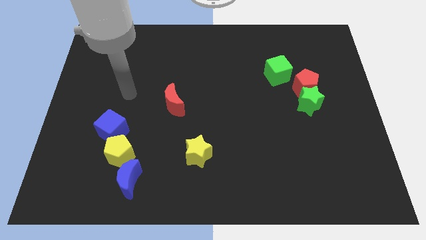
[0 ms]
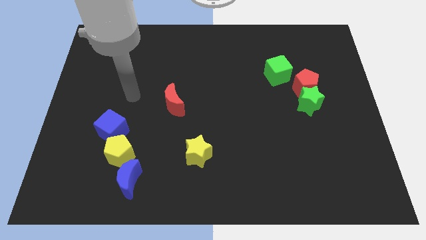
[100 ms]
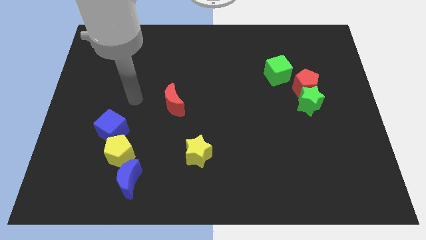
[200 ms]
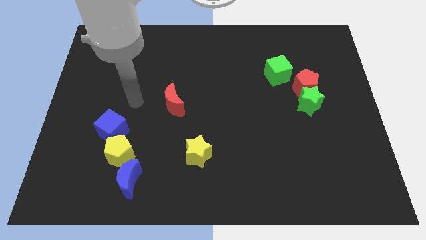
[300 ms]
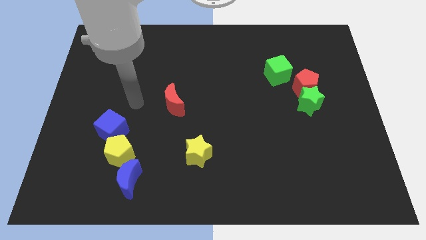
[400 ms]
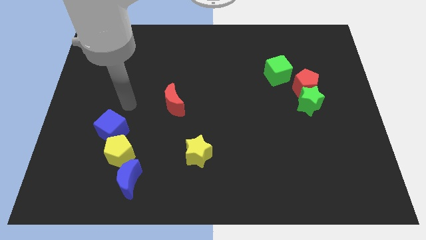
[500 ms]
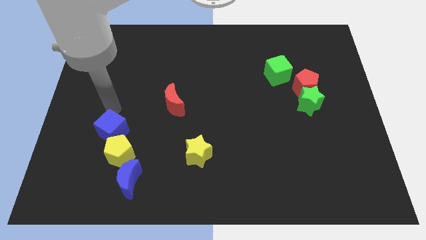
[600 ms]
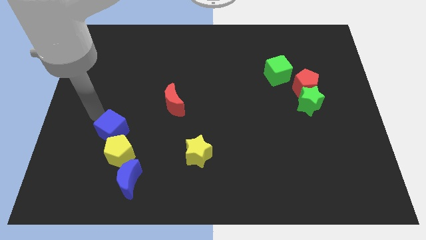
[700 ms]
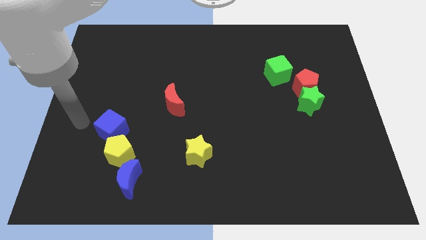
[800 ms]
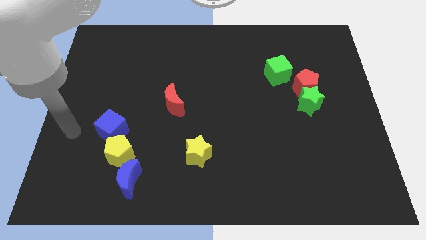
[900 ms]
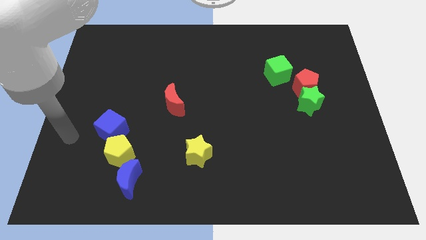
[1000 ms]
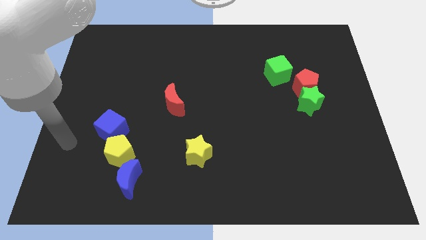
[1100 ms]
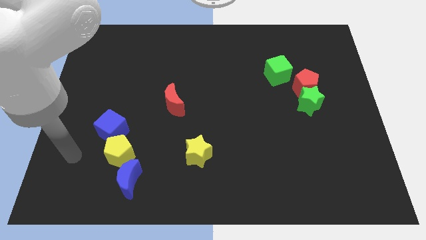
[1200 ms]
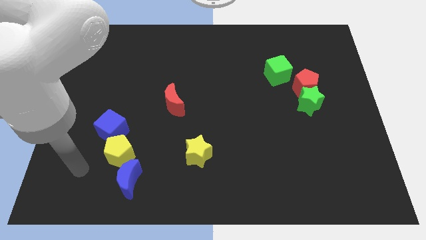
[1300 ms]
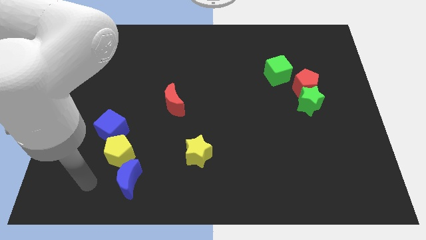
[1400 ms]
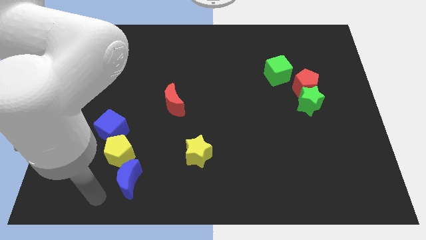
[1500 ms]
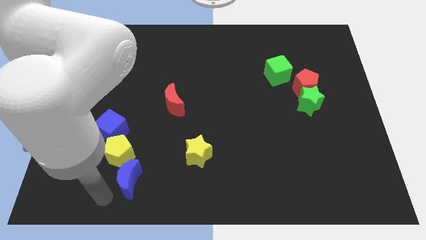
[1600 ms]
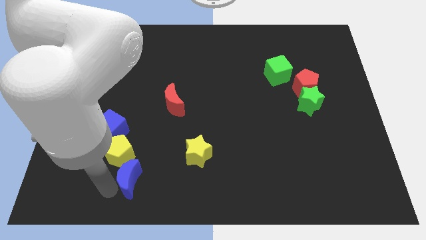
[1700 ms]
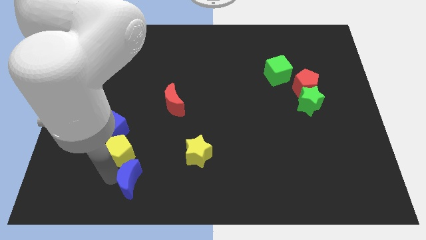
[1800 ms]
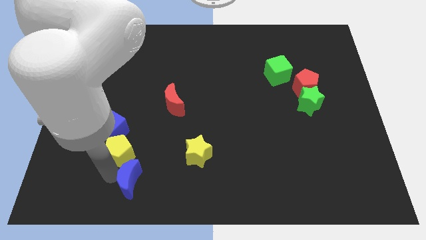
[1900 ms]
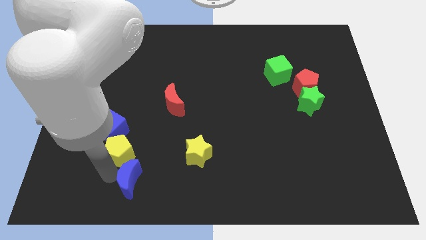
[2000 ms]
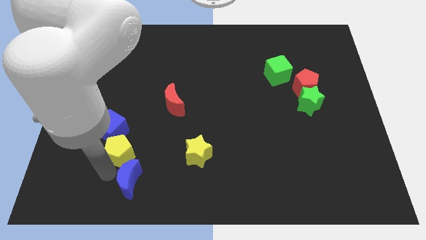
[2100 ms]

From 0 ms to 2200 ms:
move arm near yellow pentagon

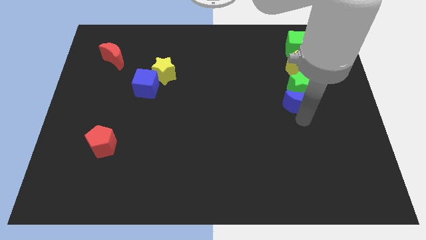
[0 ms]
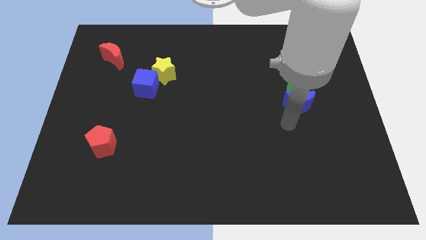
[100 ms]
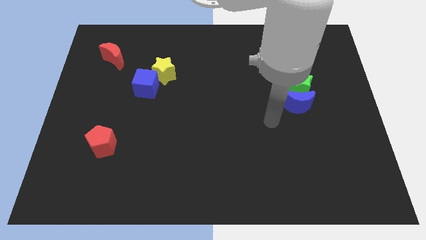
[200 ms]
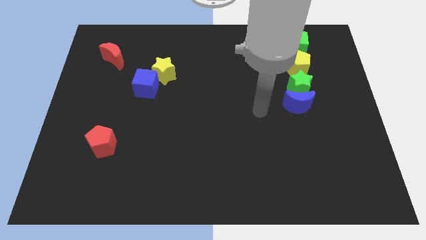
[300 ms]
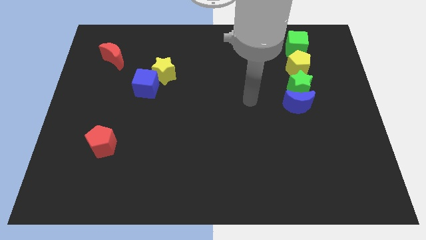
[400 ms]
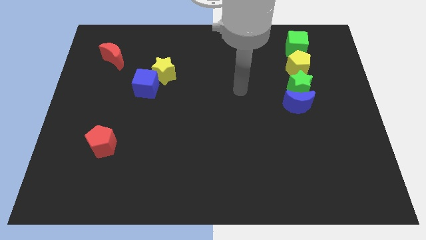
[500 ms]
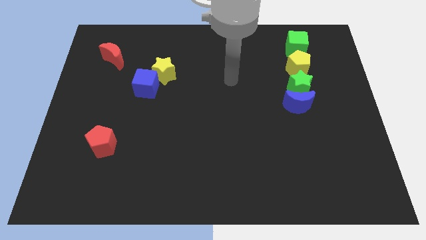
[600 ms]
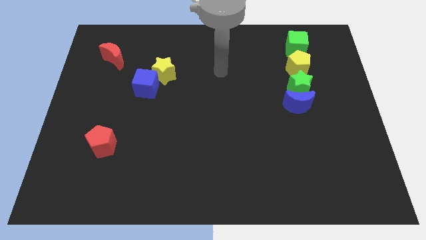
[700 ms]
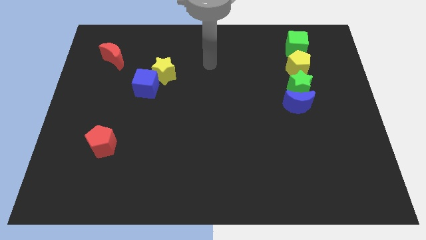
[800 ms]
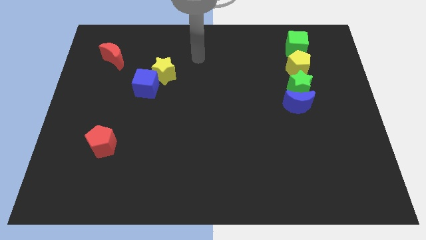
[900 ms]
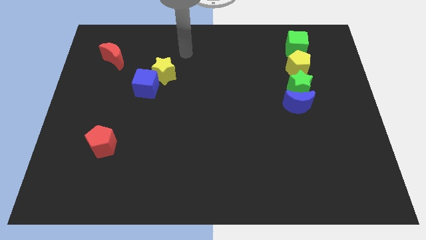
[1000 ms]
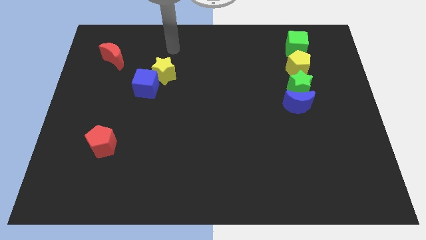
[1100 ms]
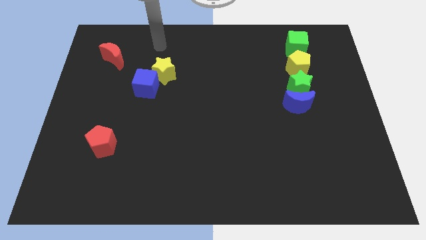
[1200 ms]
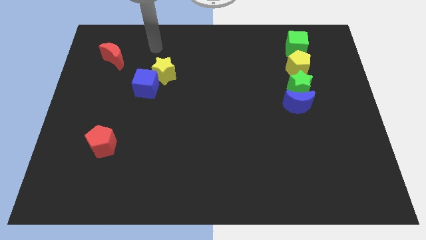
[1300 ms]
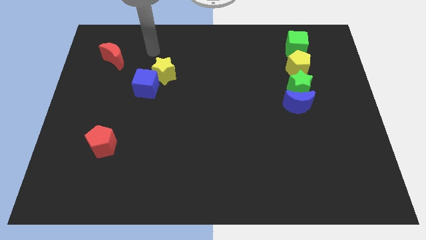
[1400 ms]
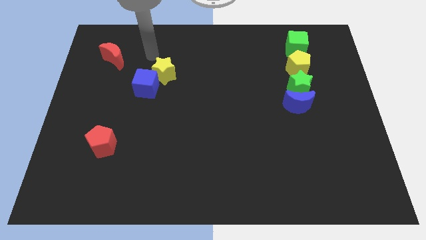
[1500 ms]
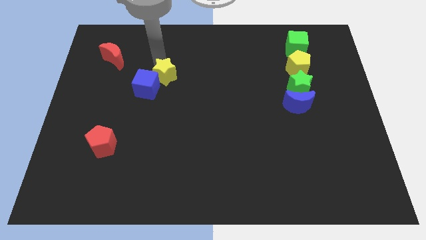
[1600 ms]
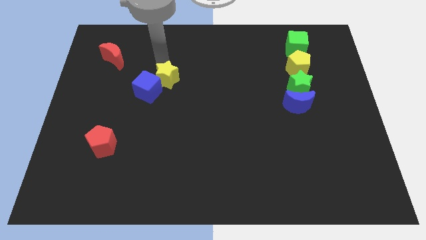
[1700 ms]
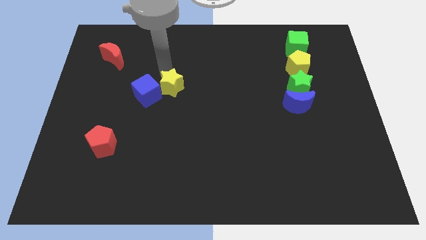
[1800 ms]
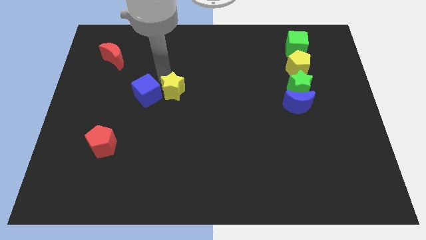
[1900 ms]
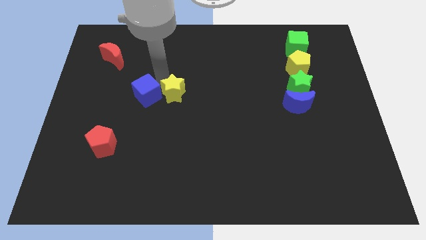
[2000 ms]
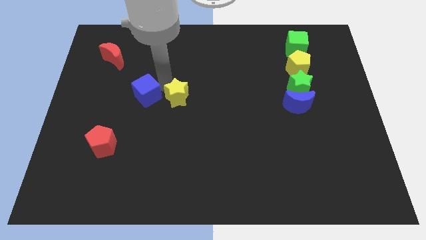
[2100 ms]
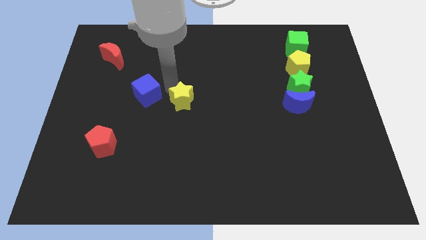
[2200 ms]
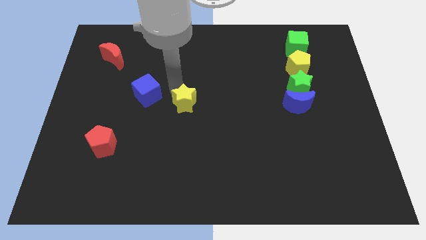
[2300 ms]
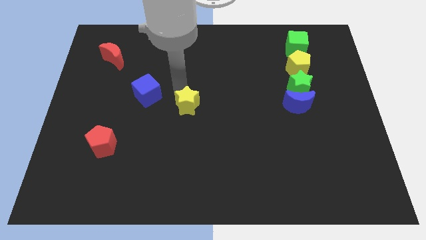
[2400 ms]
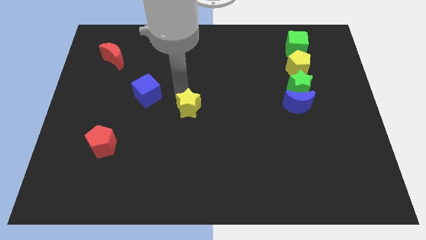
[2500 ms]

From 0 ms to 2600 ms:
separate the yellow star from the blue cube

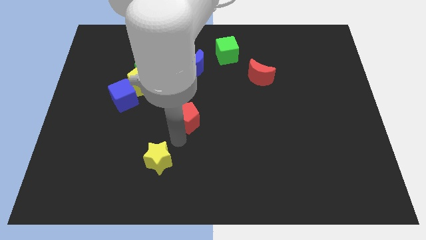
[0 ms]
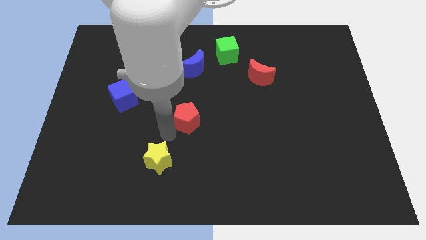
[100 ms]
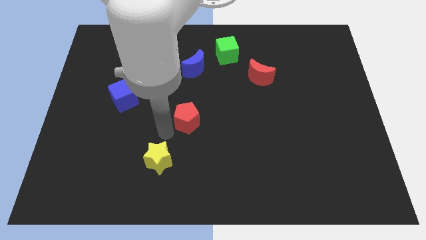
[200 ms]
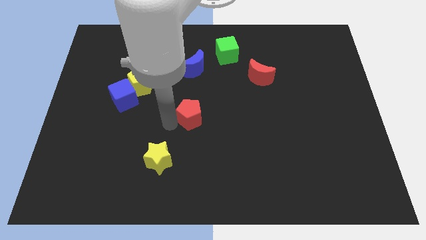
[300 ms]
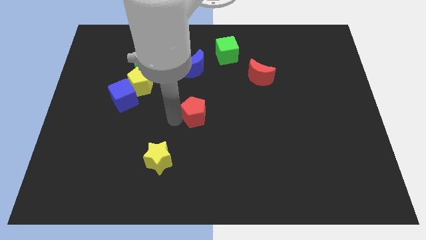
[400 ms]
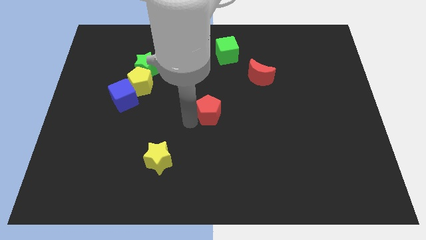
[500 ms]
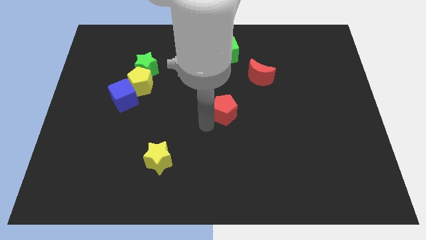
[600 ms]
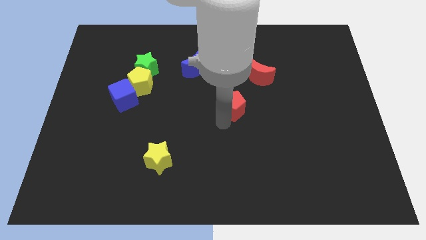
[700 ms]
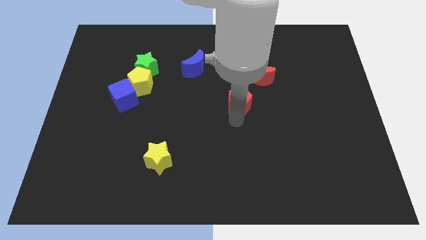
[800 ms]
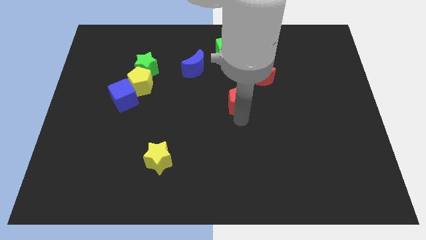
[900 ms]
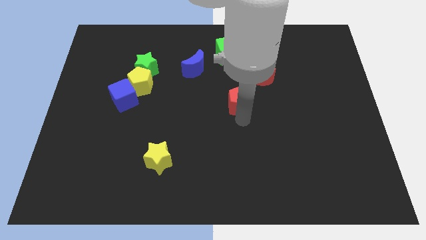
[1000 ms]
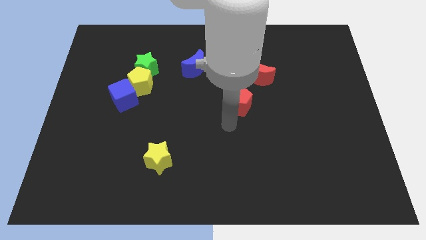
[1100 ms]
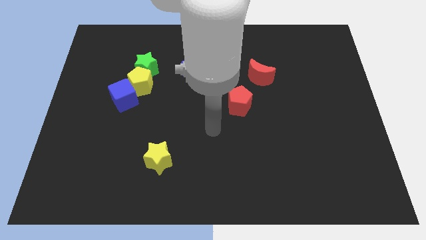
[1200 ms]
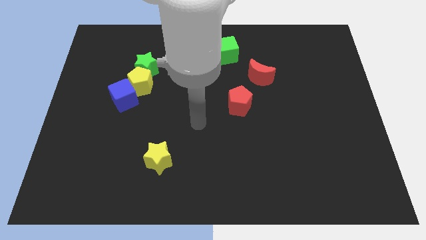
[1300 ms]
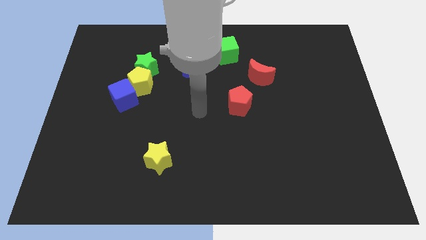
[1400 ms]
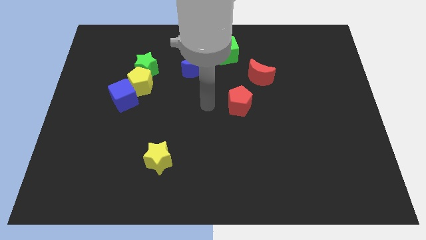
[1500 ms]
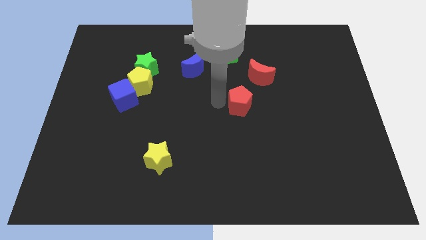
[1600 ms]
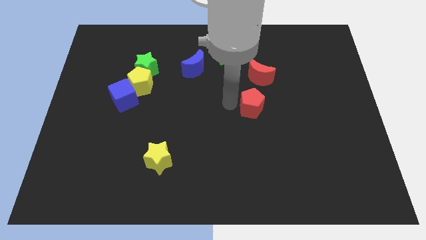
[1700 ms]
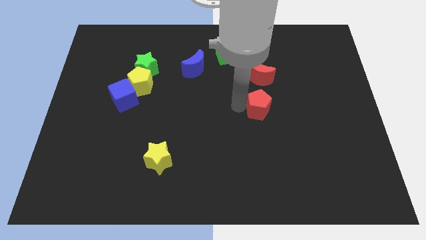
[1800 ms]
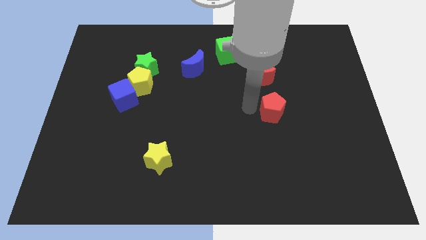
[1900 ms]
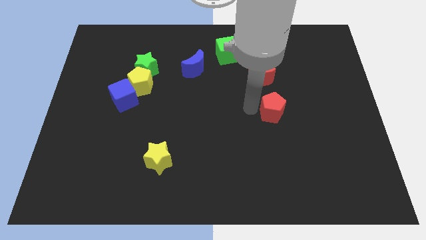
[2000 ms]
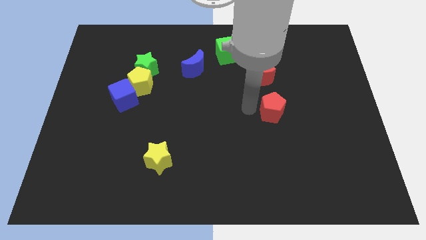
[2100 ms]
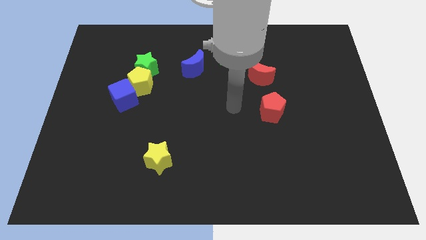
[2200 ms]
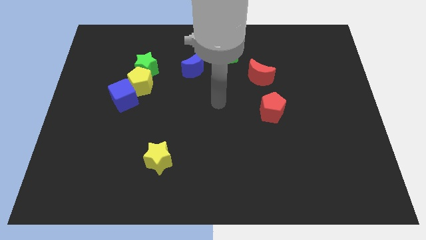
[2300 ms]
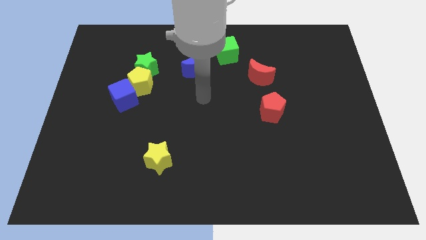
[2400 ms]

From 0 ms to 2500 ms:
place red pentagon to the bottom of red moon

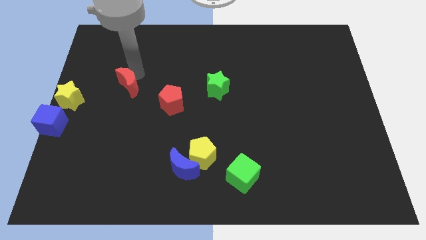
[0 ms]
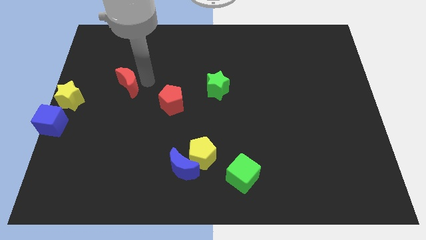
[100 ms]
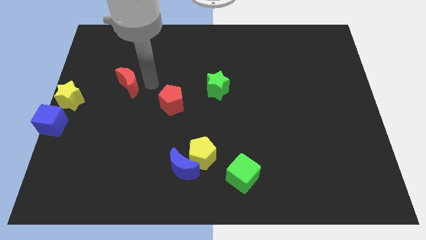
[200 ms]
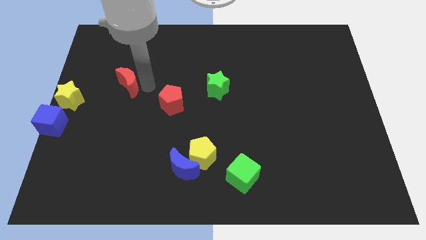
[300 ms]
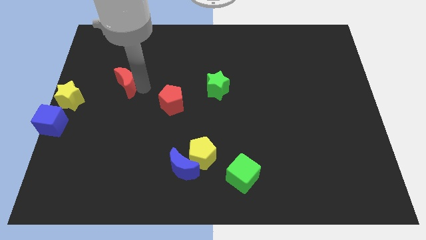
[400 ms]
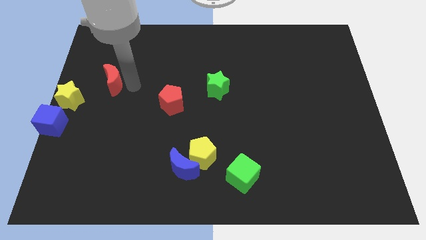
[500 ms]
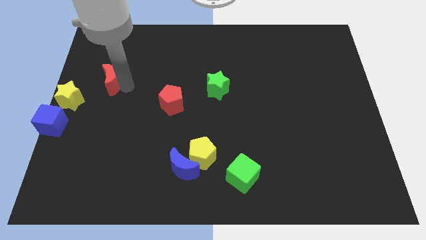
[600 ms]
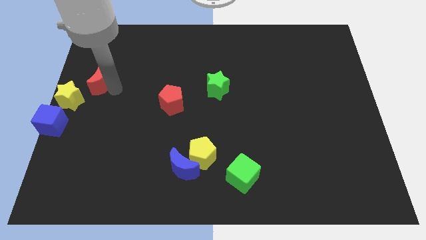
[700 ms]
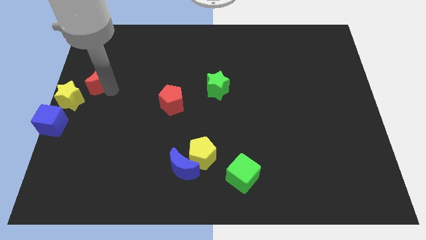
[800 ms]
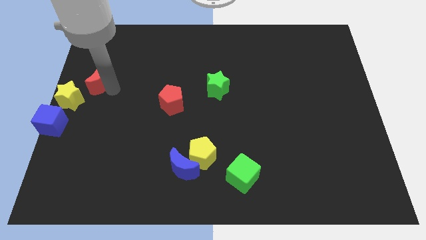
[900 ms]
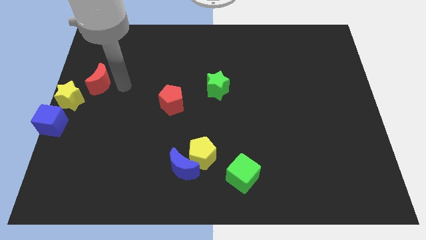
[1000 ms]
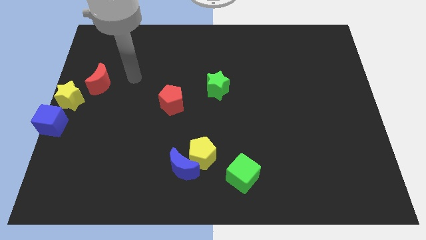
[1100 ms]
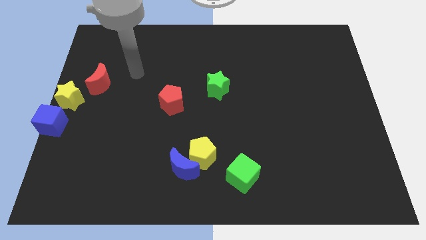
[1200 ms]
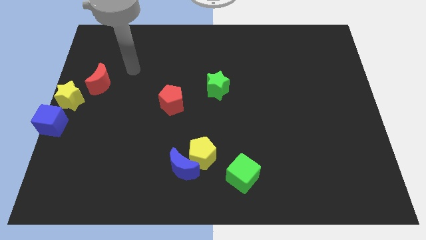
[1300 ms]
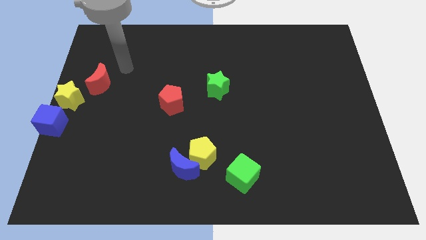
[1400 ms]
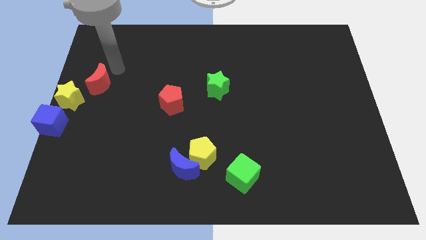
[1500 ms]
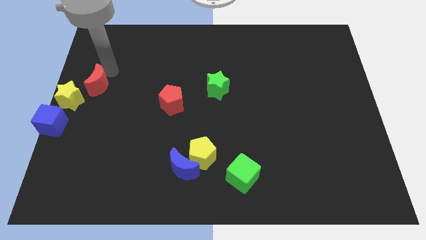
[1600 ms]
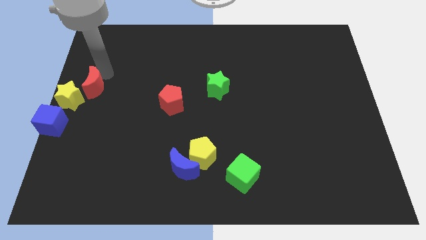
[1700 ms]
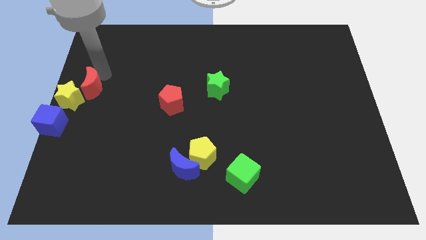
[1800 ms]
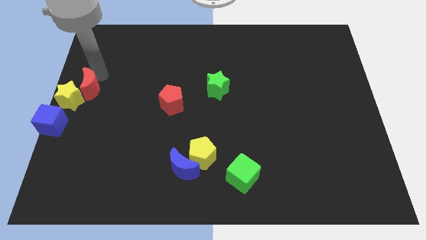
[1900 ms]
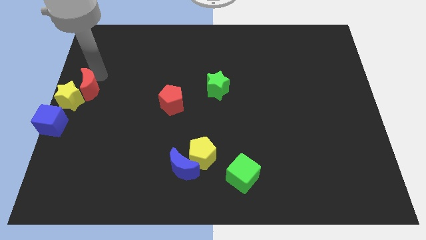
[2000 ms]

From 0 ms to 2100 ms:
drag the red crescent into the top right side of the yellow star
